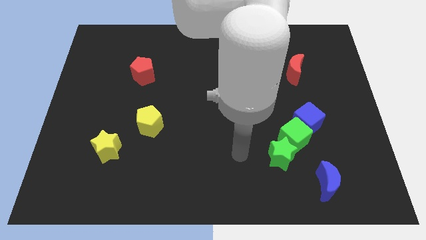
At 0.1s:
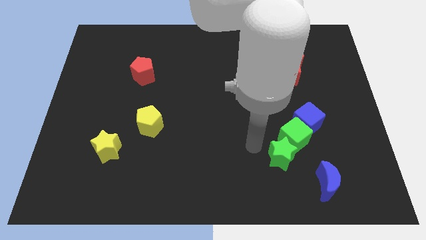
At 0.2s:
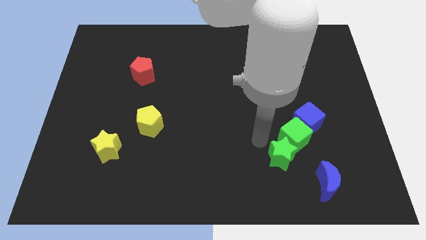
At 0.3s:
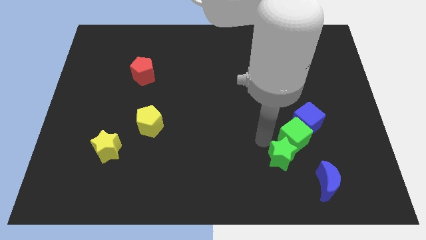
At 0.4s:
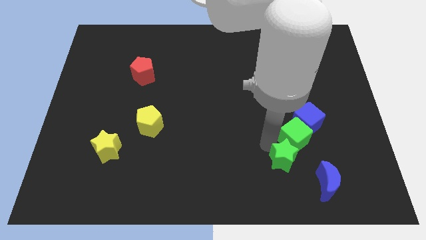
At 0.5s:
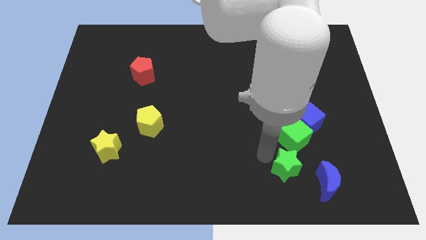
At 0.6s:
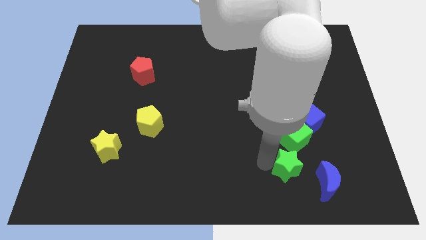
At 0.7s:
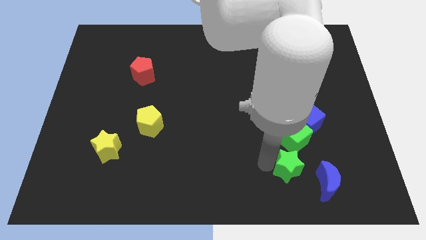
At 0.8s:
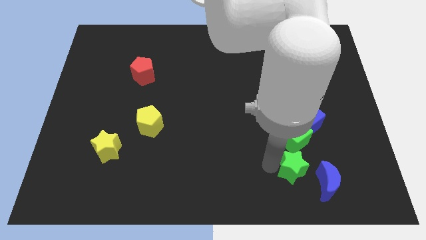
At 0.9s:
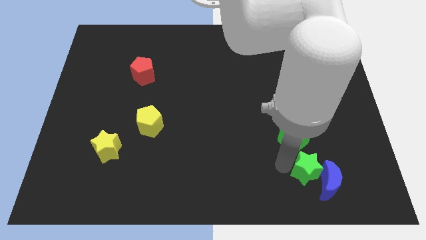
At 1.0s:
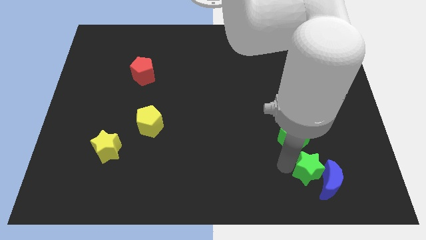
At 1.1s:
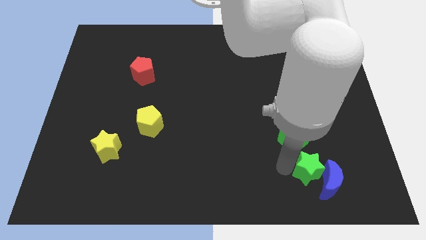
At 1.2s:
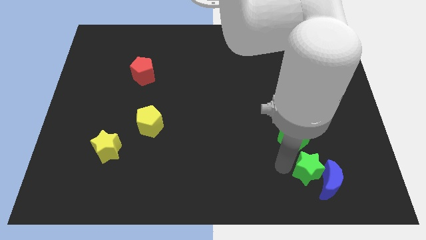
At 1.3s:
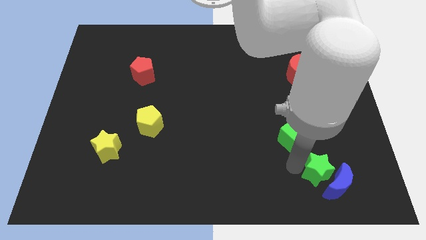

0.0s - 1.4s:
push the green star into the blue moon

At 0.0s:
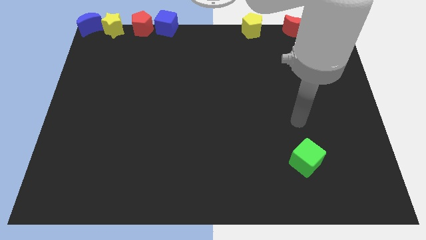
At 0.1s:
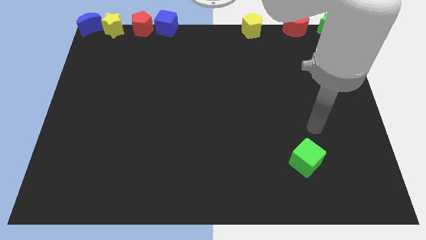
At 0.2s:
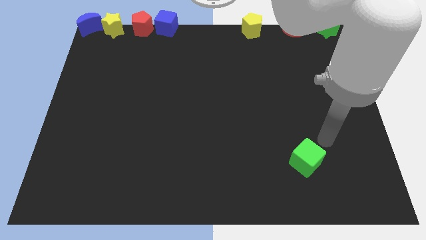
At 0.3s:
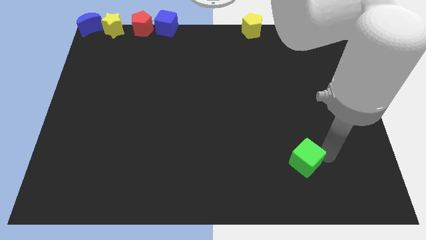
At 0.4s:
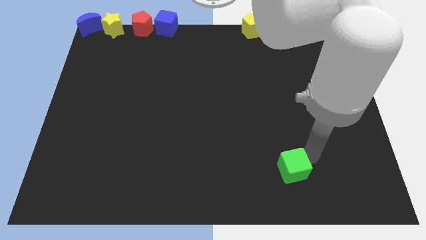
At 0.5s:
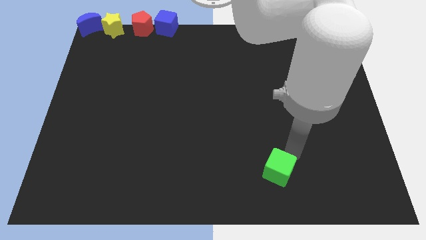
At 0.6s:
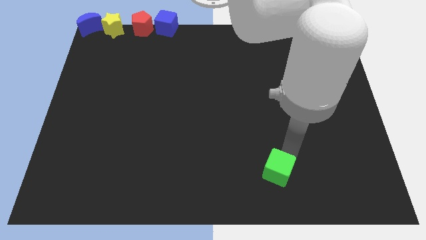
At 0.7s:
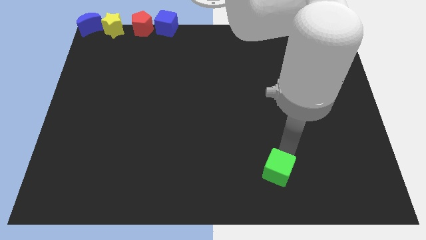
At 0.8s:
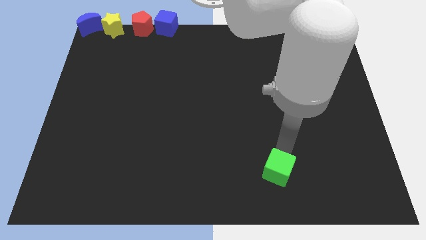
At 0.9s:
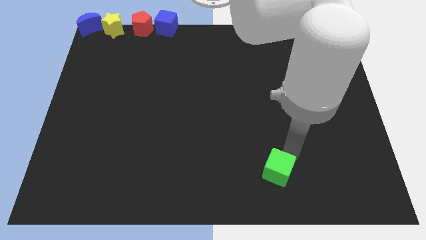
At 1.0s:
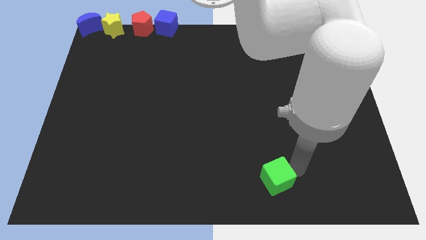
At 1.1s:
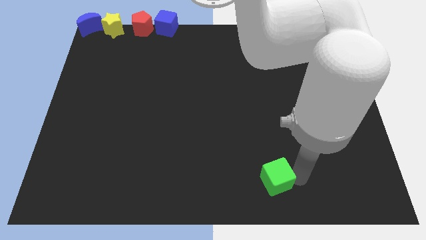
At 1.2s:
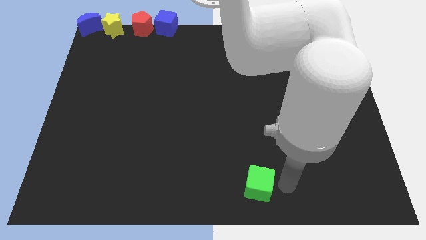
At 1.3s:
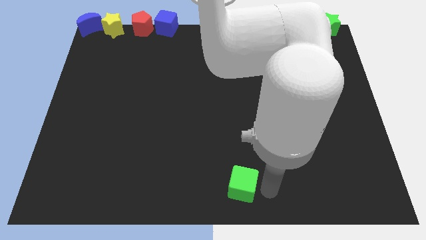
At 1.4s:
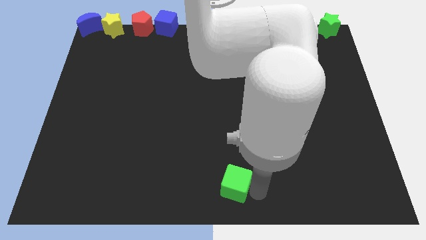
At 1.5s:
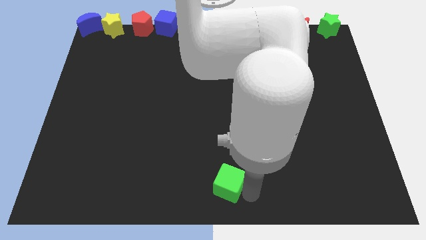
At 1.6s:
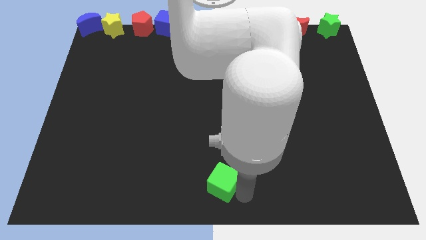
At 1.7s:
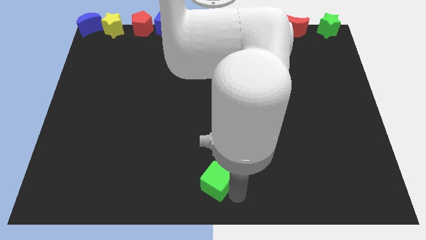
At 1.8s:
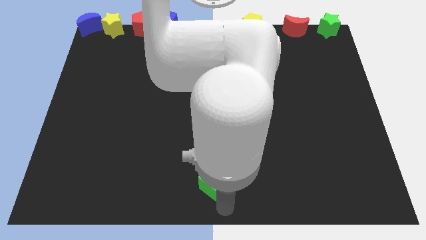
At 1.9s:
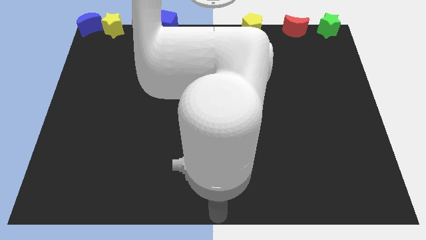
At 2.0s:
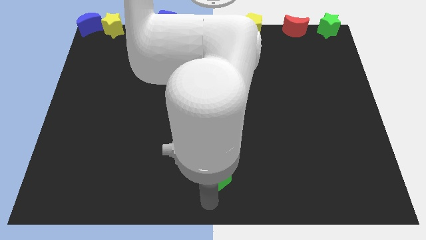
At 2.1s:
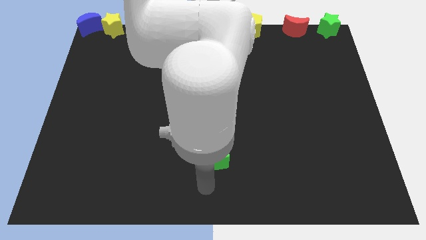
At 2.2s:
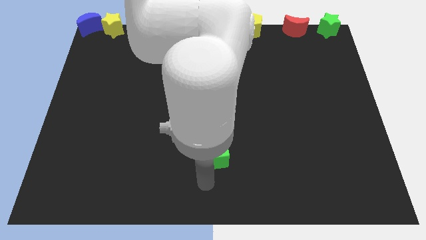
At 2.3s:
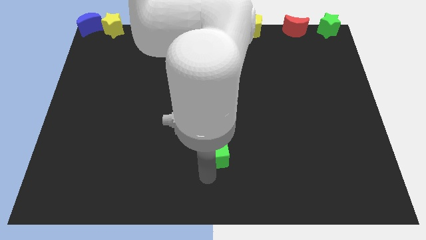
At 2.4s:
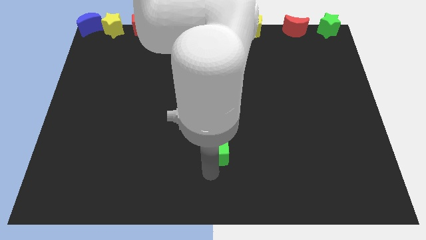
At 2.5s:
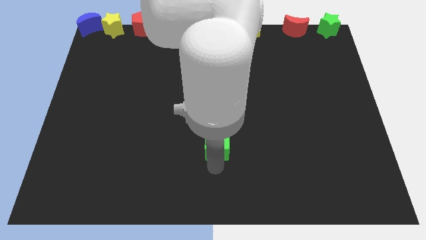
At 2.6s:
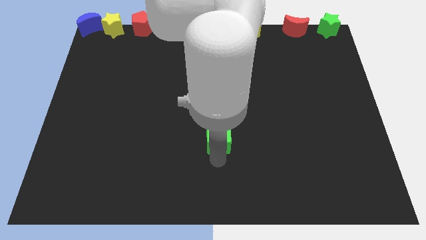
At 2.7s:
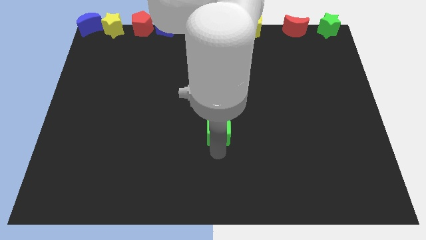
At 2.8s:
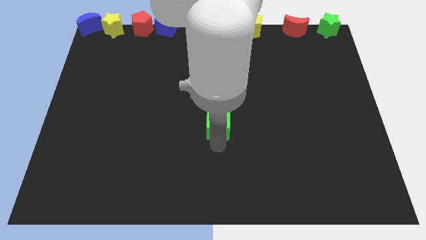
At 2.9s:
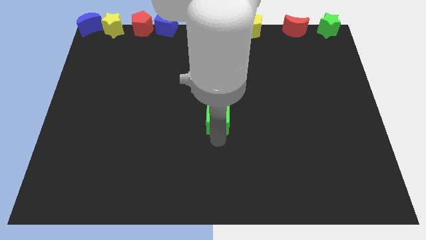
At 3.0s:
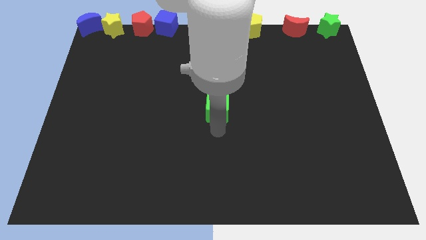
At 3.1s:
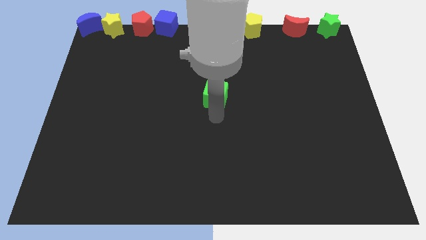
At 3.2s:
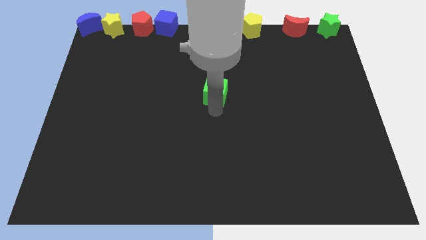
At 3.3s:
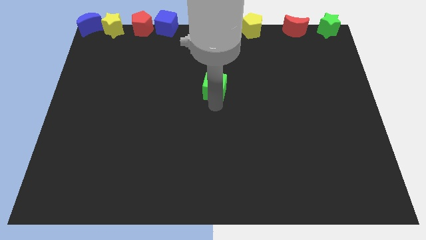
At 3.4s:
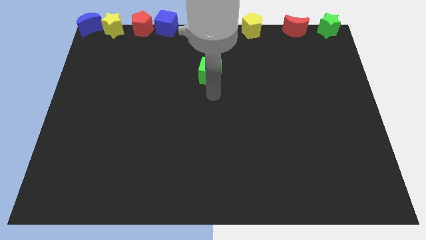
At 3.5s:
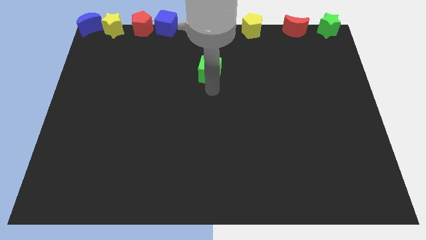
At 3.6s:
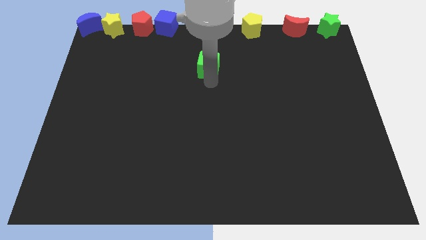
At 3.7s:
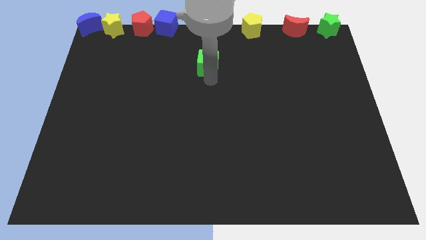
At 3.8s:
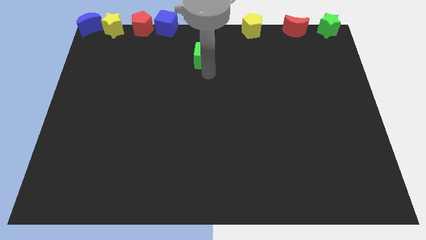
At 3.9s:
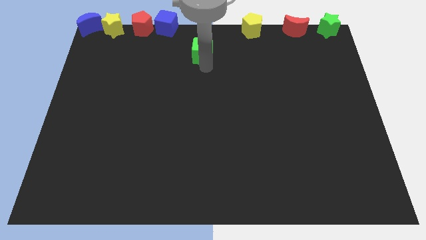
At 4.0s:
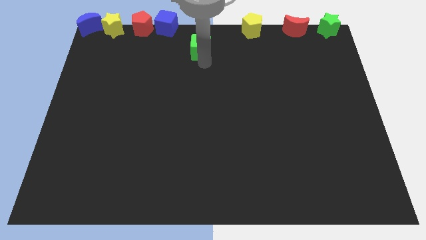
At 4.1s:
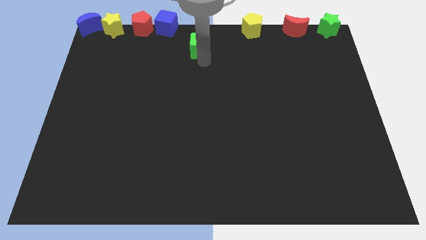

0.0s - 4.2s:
push the green cube to the top center of the board

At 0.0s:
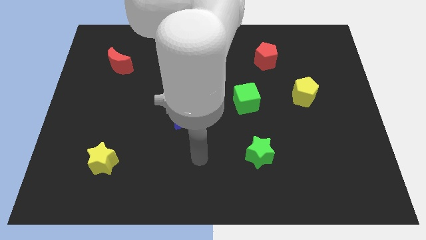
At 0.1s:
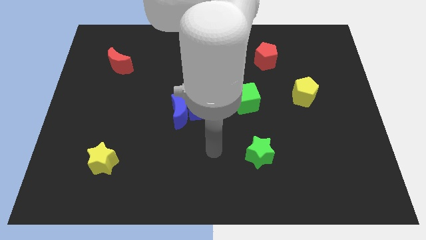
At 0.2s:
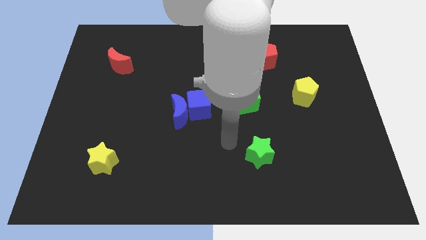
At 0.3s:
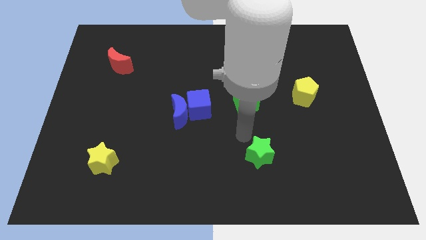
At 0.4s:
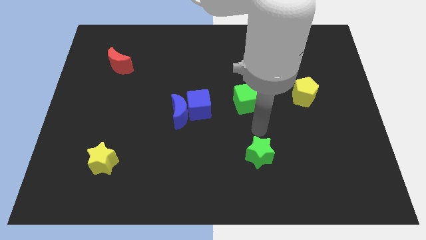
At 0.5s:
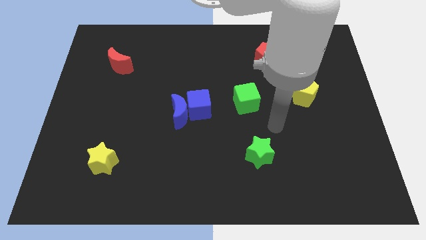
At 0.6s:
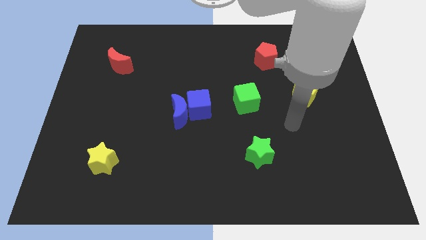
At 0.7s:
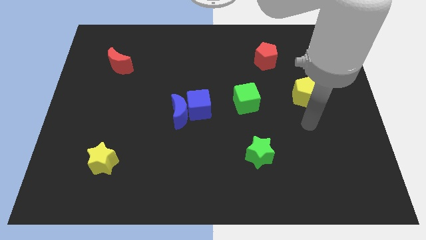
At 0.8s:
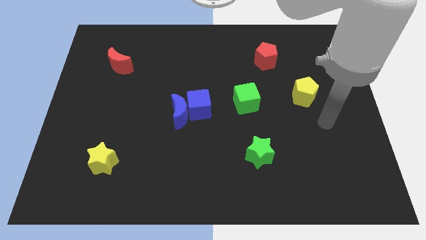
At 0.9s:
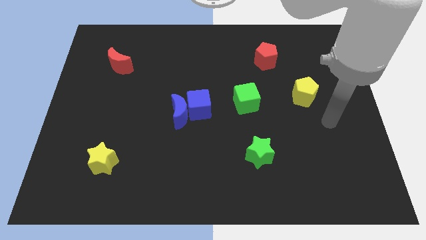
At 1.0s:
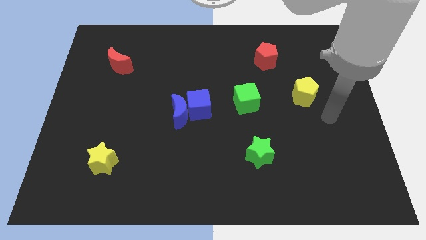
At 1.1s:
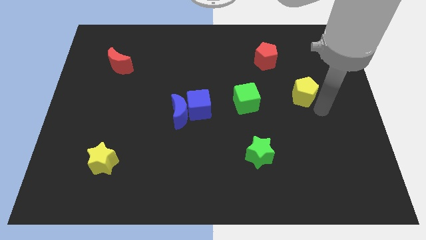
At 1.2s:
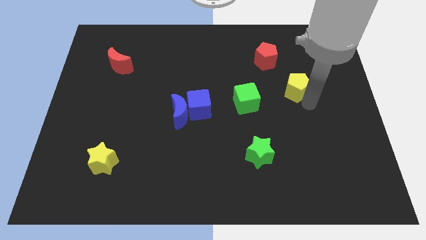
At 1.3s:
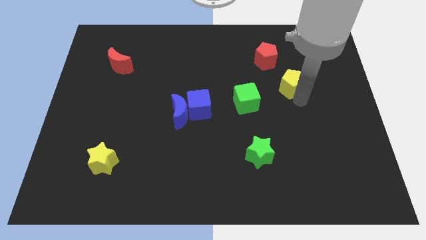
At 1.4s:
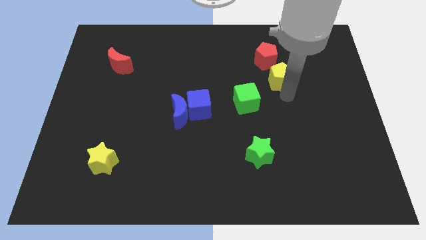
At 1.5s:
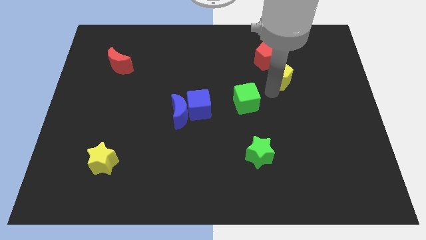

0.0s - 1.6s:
push the yellow pentgaon below the red pentagon

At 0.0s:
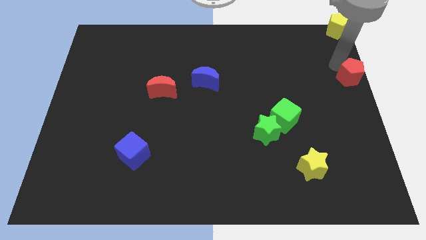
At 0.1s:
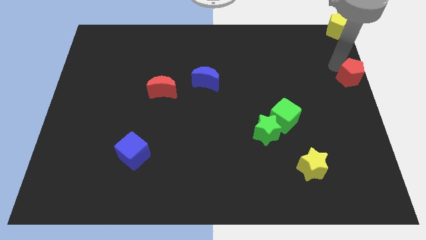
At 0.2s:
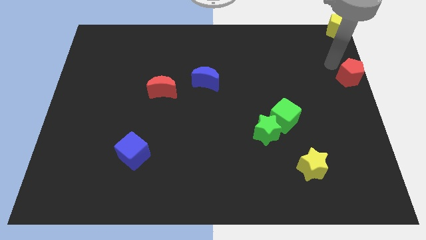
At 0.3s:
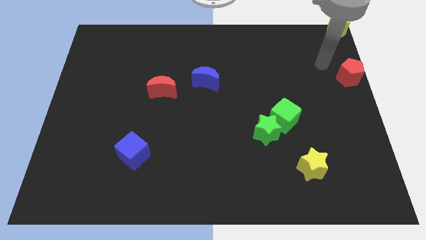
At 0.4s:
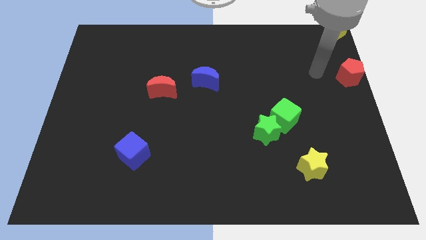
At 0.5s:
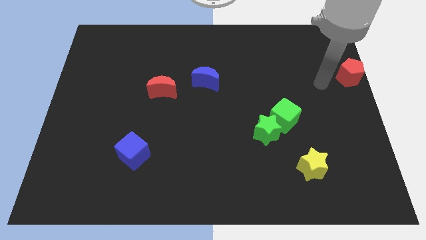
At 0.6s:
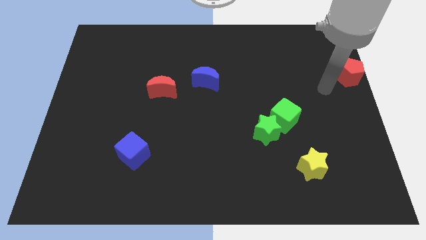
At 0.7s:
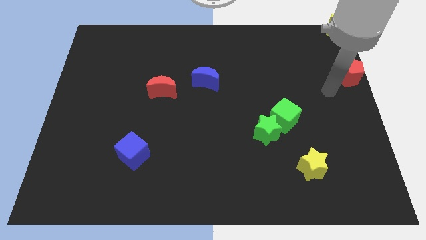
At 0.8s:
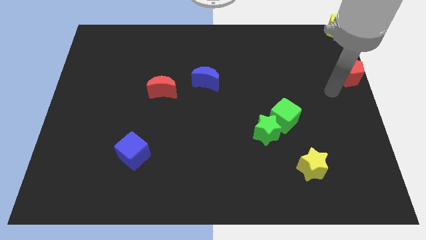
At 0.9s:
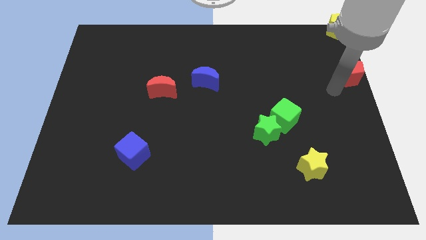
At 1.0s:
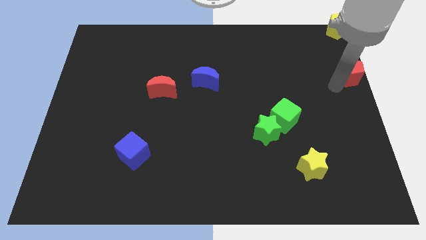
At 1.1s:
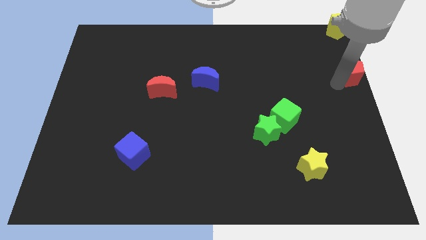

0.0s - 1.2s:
place your arm at the bottom left side of red pentagon

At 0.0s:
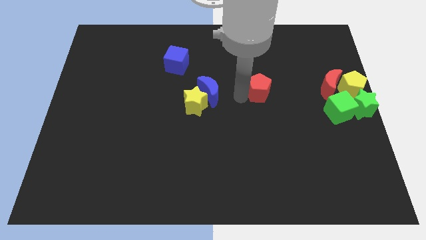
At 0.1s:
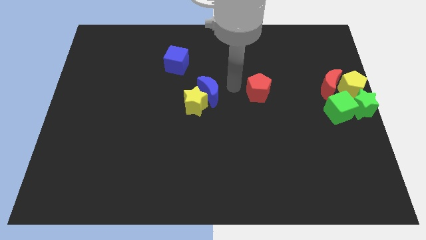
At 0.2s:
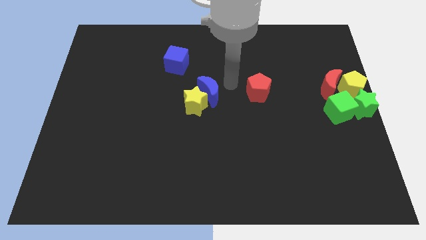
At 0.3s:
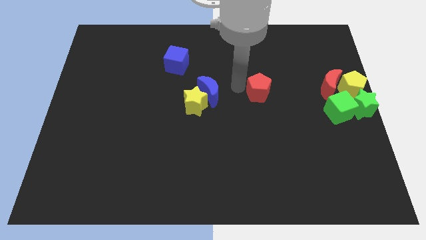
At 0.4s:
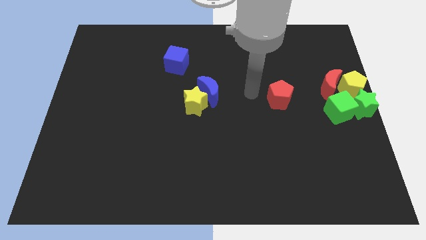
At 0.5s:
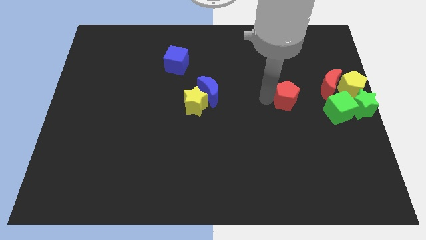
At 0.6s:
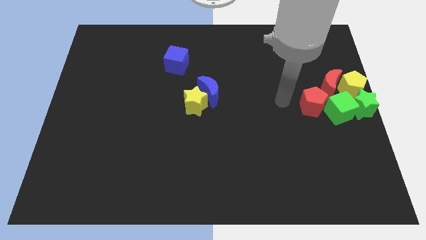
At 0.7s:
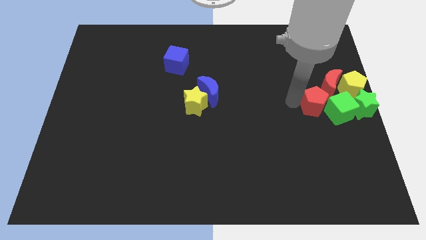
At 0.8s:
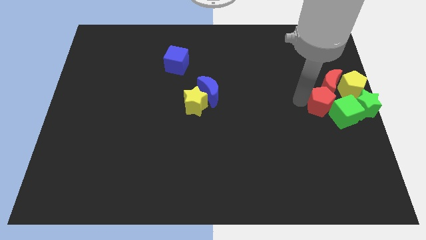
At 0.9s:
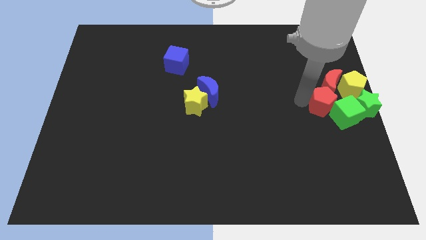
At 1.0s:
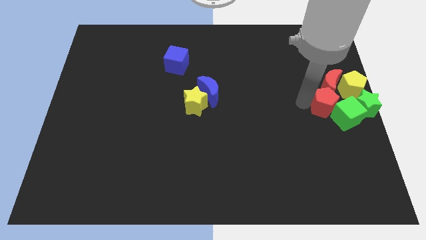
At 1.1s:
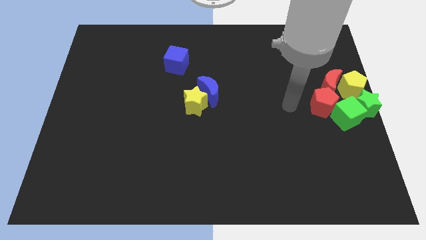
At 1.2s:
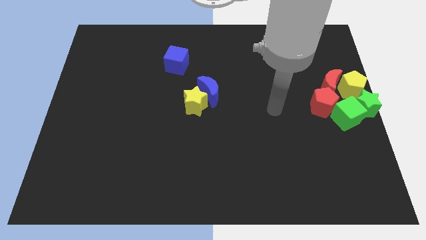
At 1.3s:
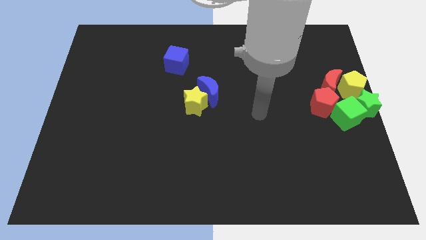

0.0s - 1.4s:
push the red pentagon into the green cube
